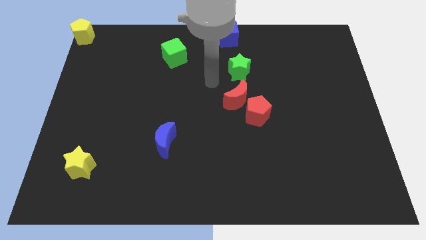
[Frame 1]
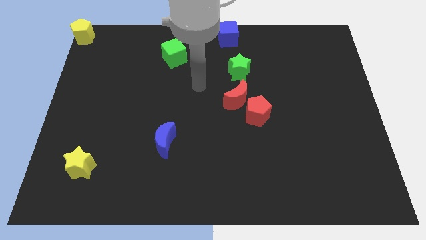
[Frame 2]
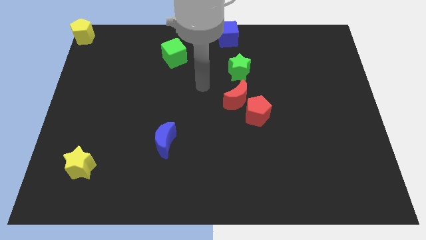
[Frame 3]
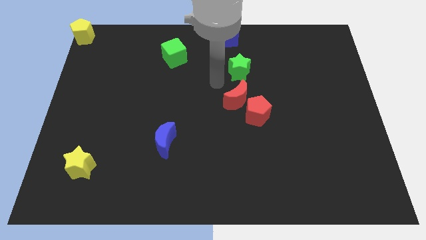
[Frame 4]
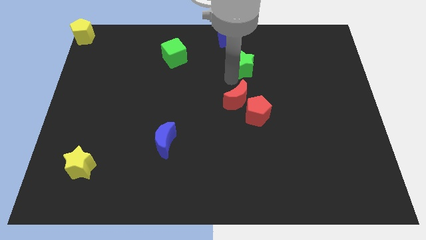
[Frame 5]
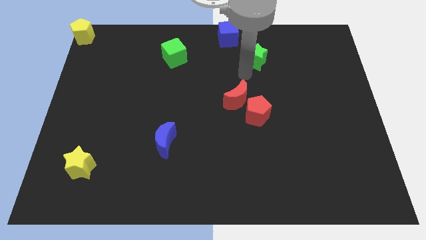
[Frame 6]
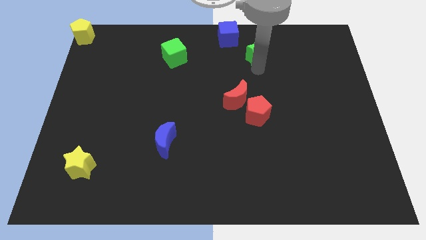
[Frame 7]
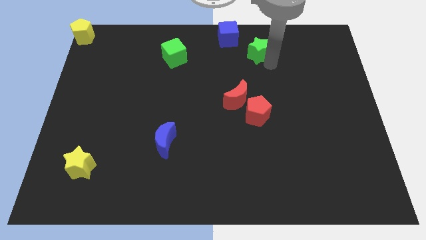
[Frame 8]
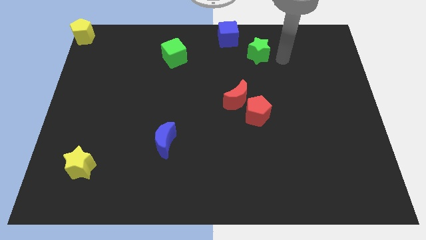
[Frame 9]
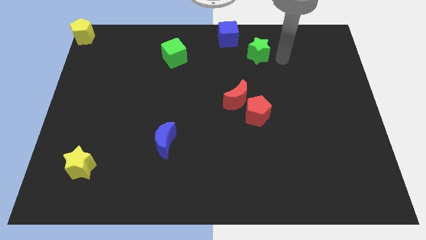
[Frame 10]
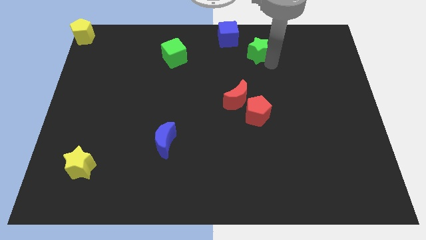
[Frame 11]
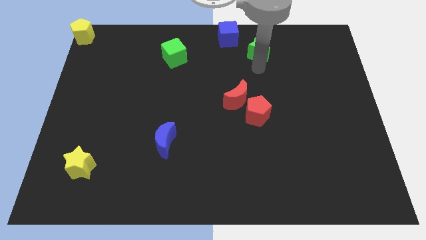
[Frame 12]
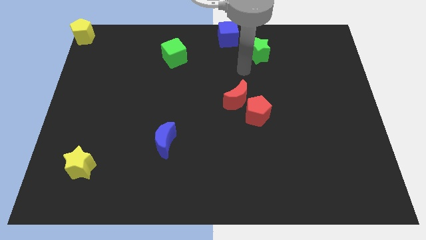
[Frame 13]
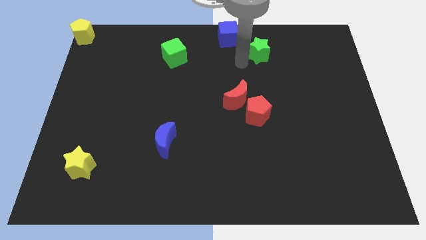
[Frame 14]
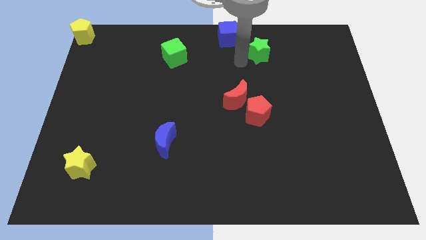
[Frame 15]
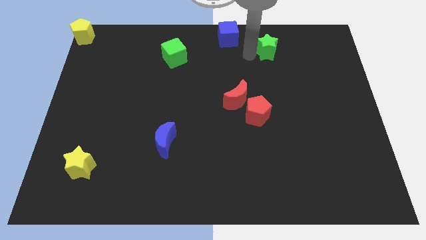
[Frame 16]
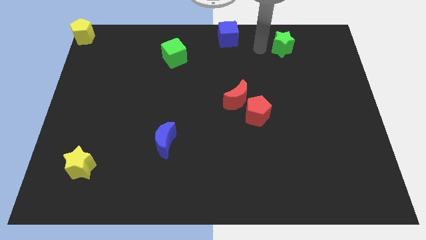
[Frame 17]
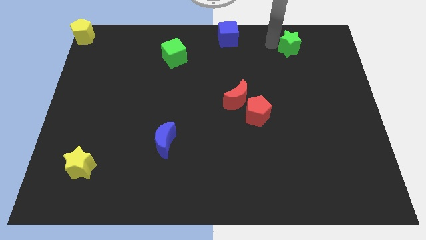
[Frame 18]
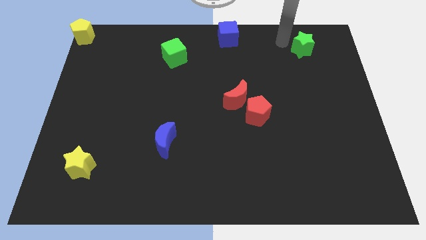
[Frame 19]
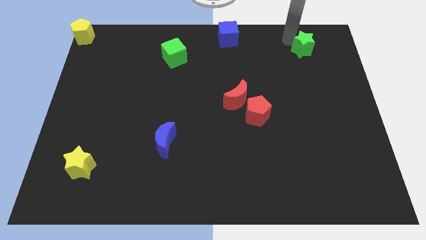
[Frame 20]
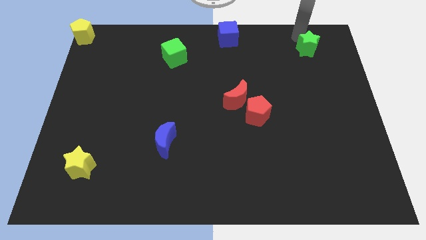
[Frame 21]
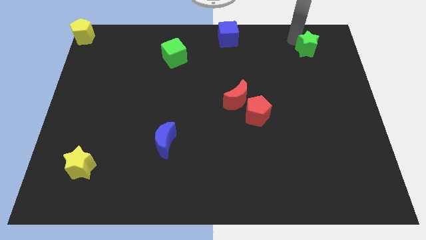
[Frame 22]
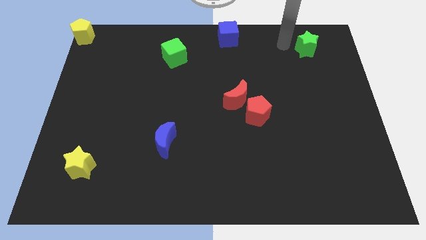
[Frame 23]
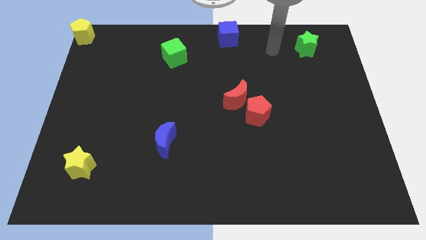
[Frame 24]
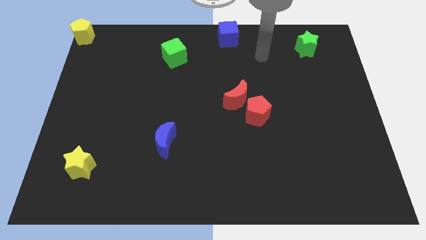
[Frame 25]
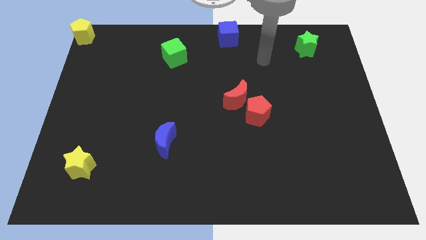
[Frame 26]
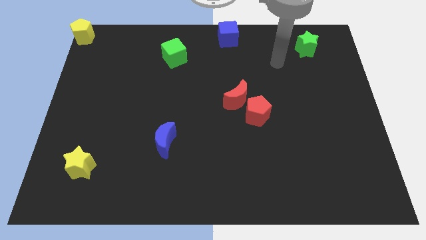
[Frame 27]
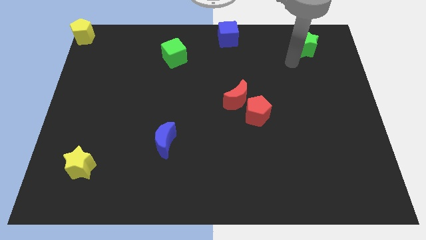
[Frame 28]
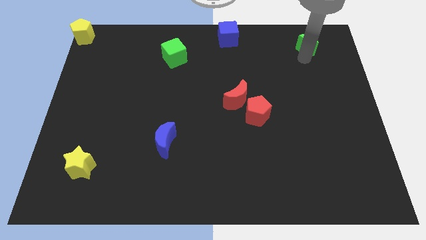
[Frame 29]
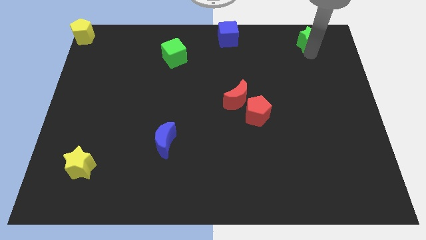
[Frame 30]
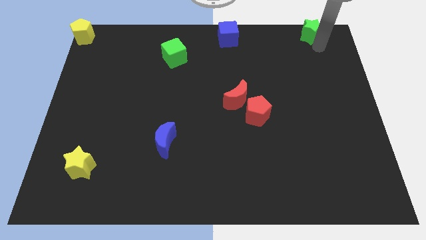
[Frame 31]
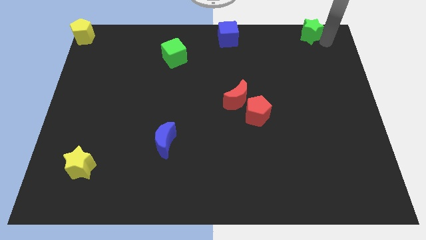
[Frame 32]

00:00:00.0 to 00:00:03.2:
place green star diagonal towards red pentagon

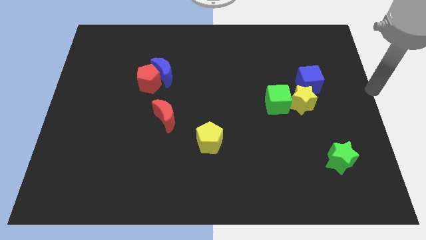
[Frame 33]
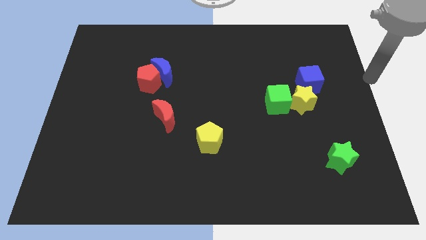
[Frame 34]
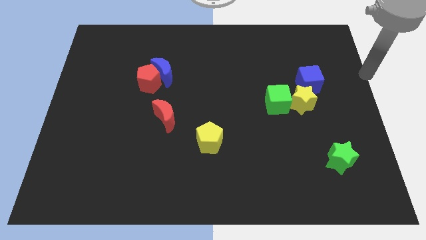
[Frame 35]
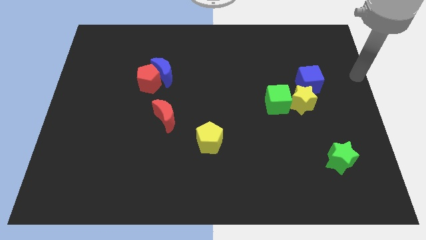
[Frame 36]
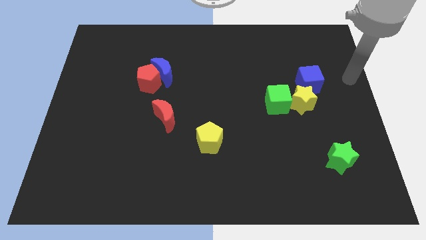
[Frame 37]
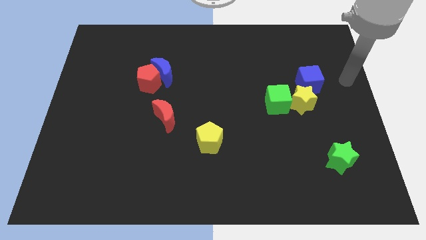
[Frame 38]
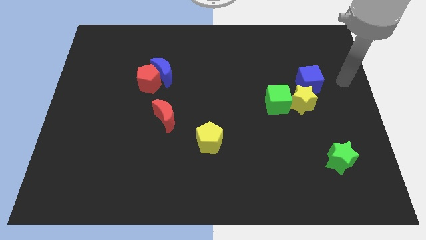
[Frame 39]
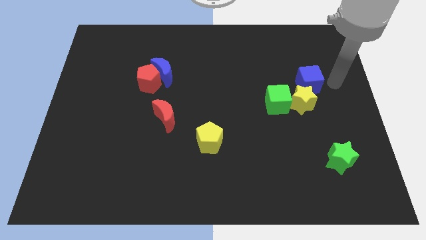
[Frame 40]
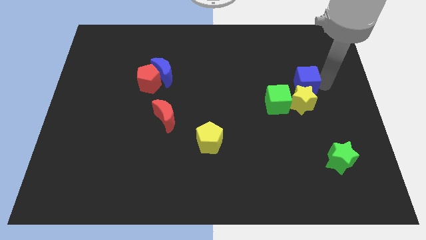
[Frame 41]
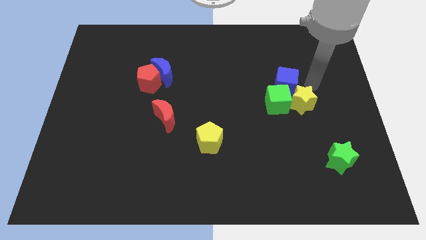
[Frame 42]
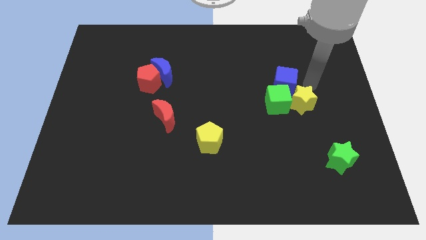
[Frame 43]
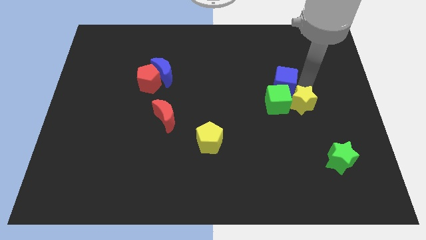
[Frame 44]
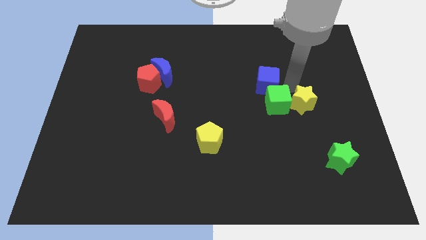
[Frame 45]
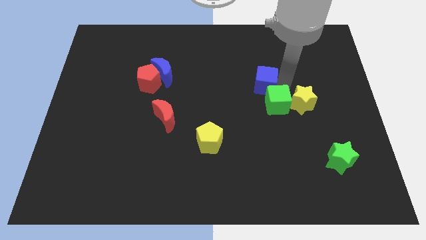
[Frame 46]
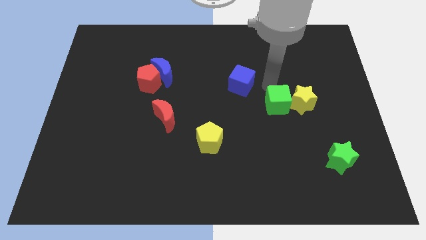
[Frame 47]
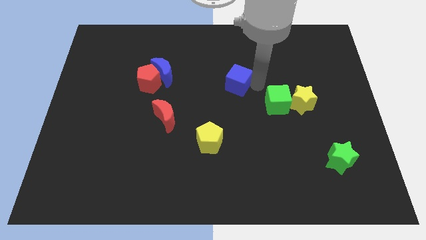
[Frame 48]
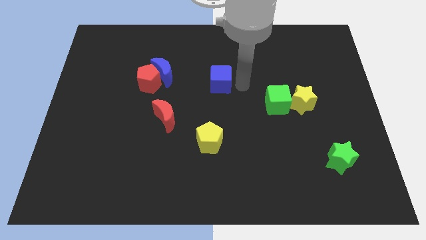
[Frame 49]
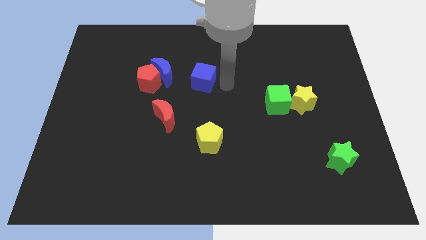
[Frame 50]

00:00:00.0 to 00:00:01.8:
push the blue cube towards the center of the board

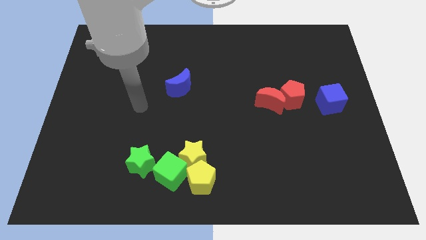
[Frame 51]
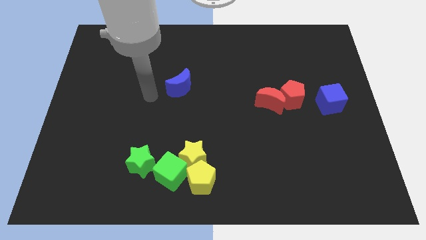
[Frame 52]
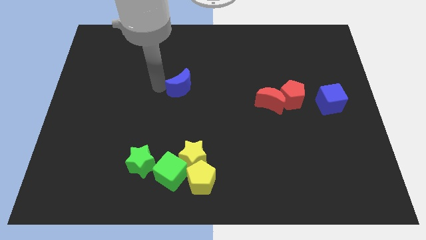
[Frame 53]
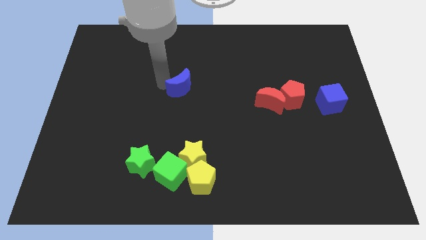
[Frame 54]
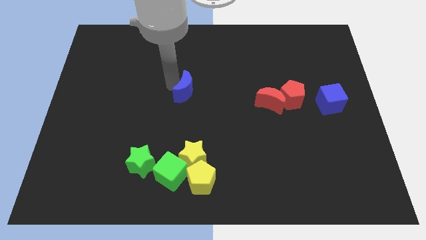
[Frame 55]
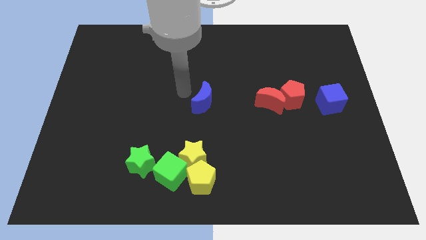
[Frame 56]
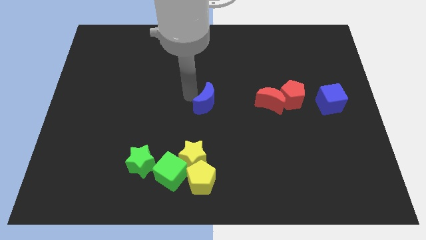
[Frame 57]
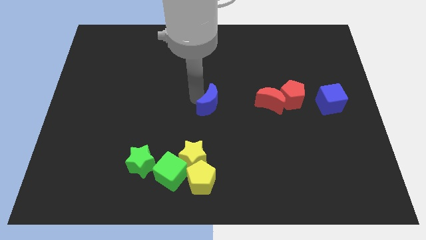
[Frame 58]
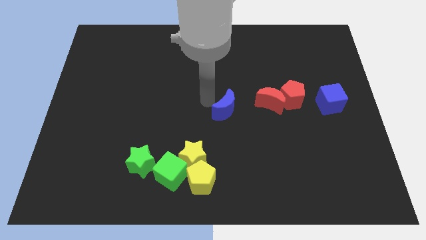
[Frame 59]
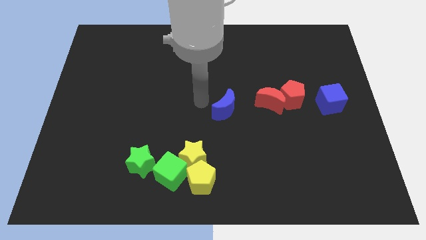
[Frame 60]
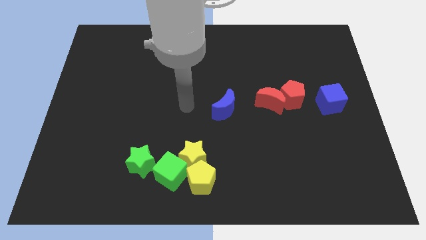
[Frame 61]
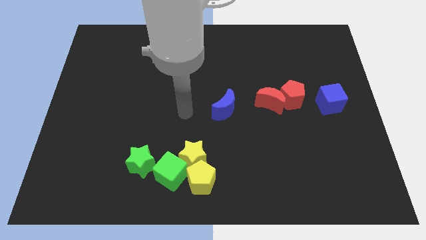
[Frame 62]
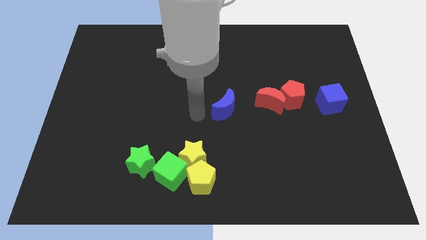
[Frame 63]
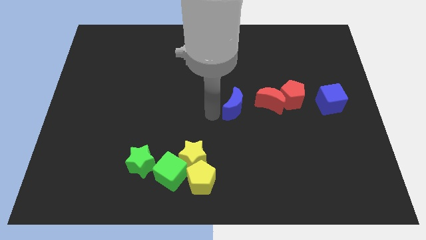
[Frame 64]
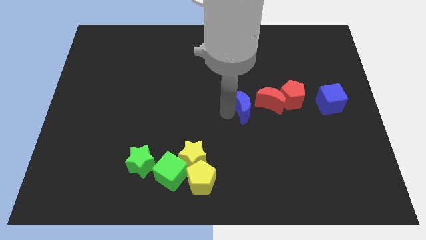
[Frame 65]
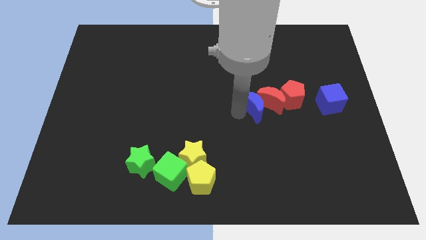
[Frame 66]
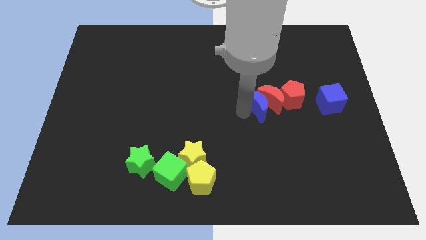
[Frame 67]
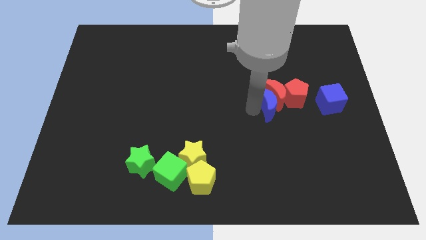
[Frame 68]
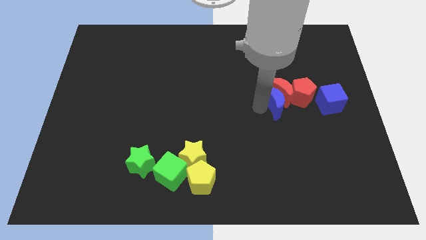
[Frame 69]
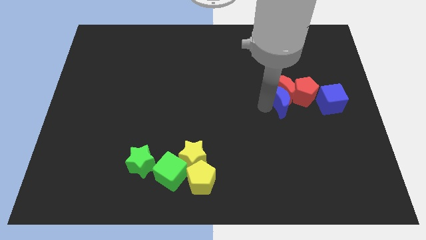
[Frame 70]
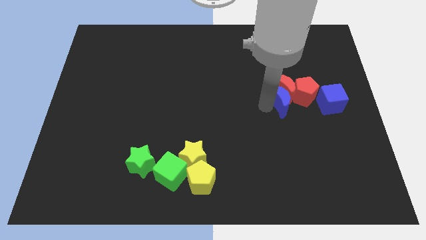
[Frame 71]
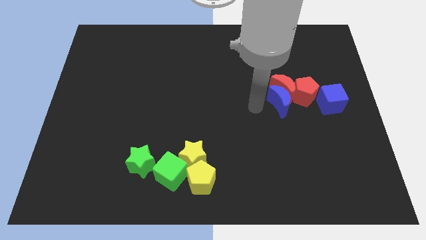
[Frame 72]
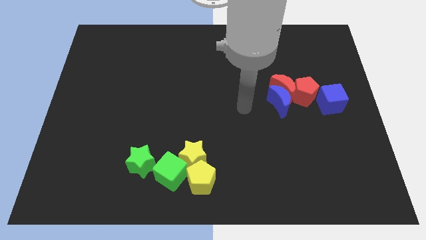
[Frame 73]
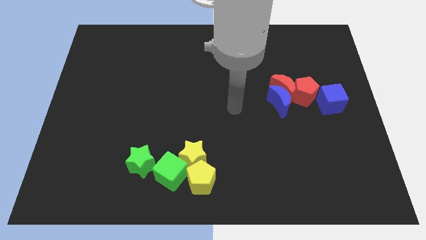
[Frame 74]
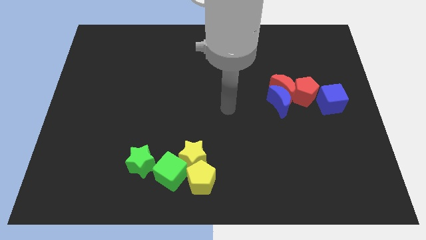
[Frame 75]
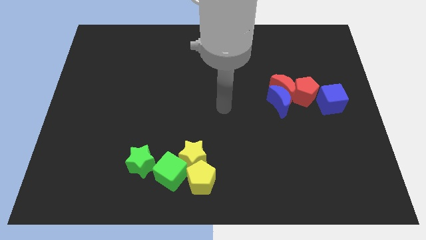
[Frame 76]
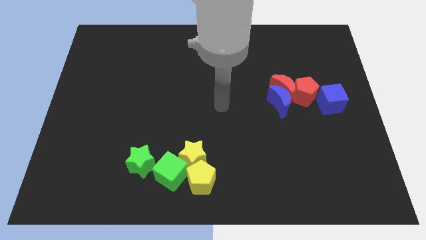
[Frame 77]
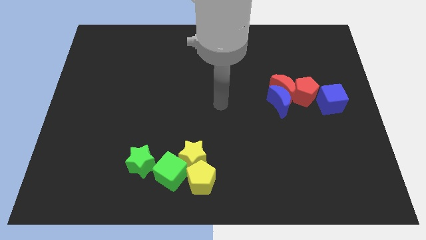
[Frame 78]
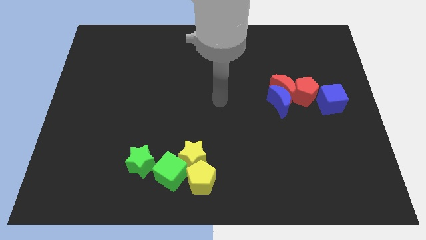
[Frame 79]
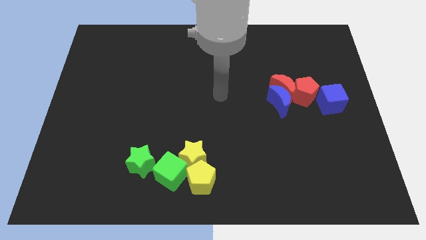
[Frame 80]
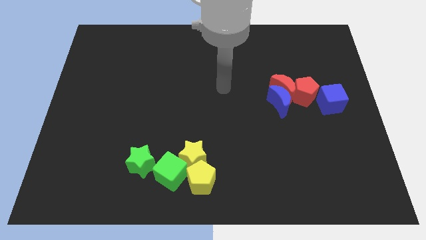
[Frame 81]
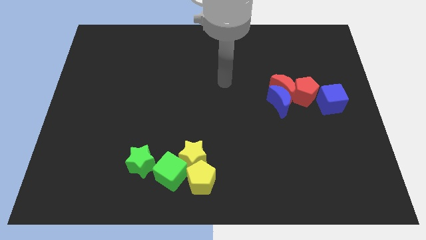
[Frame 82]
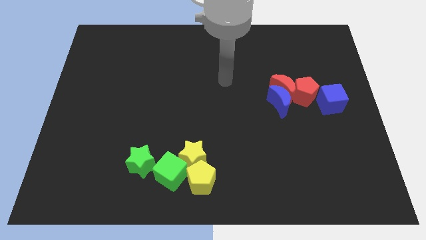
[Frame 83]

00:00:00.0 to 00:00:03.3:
push the blue moon into the red crescent

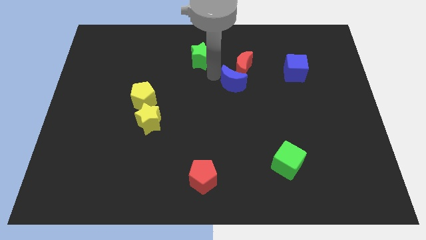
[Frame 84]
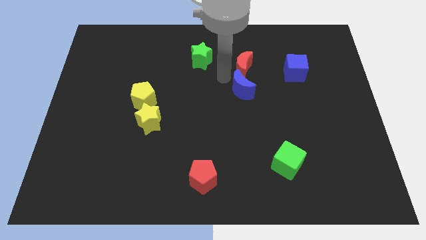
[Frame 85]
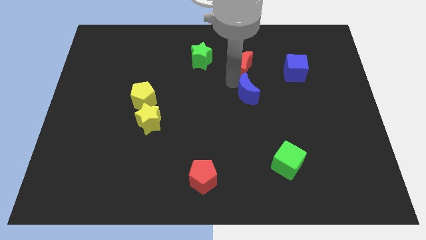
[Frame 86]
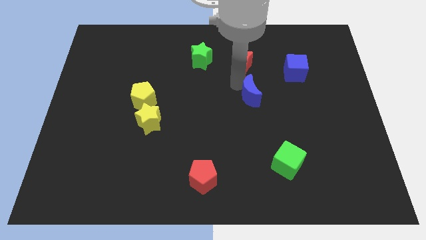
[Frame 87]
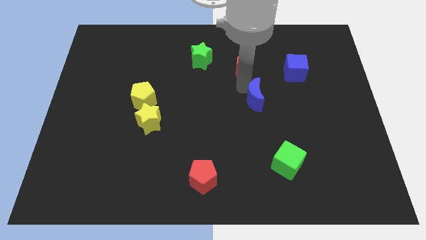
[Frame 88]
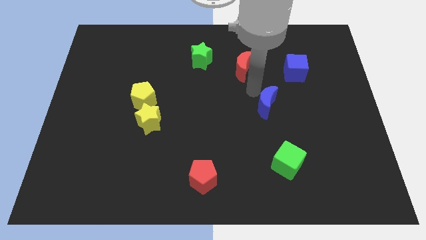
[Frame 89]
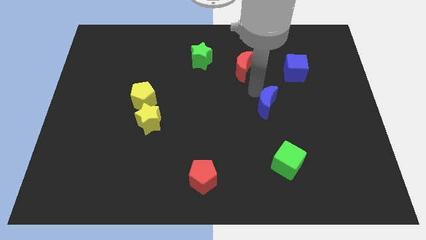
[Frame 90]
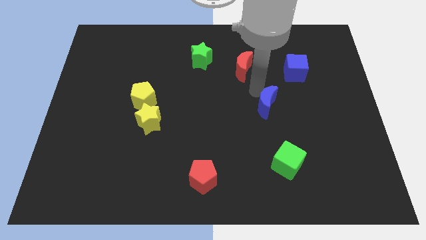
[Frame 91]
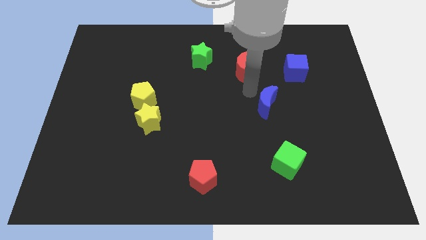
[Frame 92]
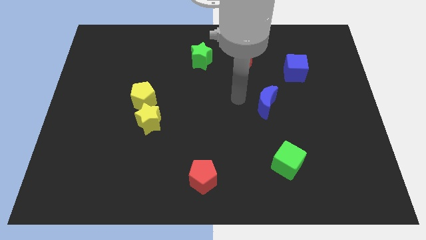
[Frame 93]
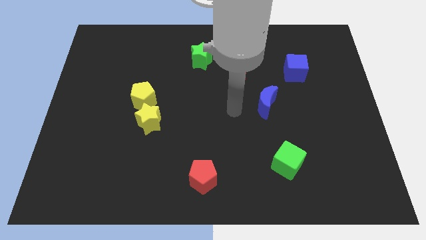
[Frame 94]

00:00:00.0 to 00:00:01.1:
separate blue moon from red moon
